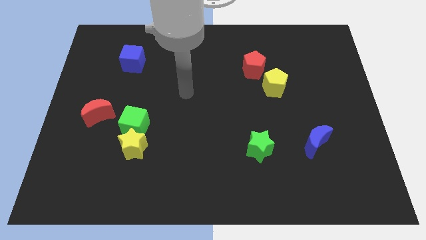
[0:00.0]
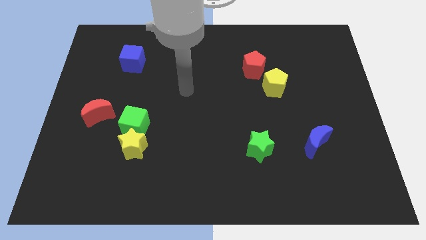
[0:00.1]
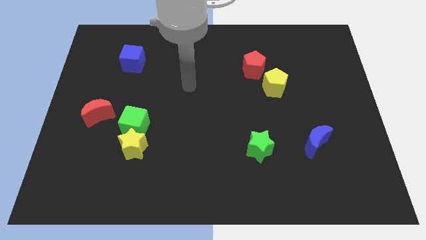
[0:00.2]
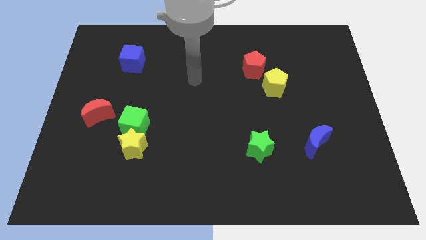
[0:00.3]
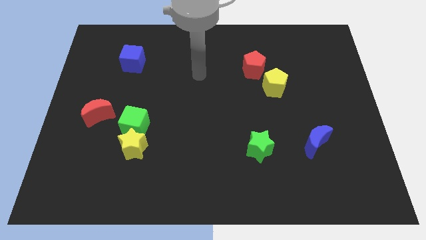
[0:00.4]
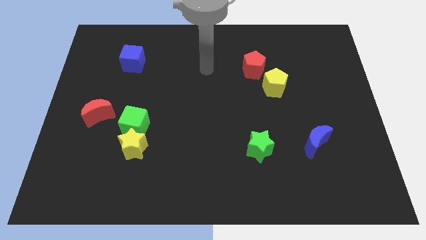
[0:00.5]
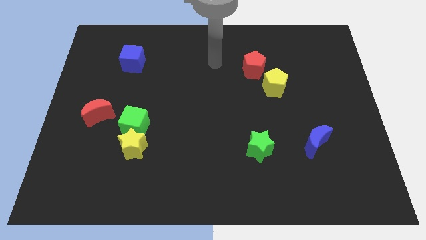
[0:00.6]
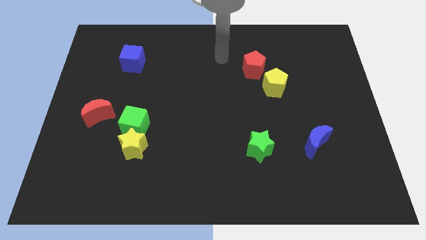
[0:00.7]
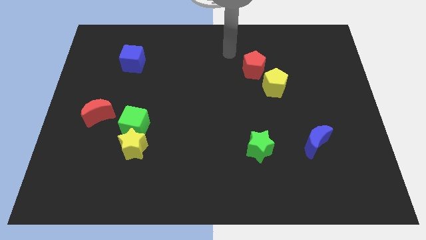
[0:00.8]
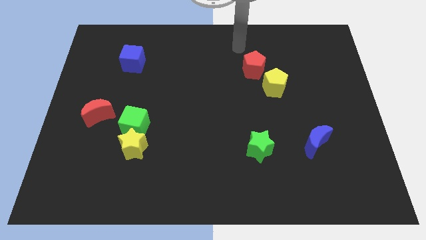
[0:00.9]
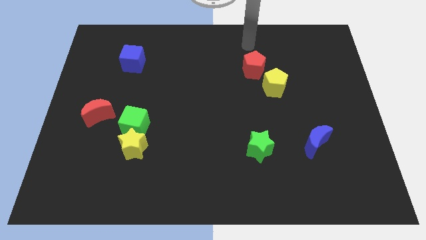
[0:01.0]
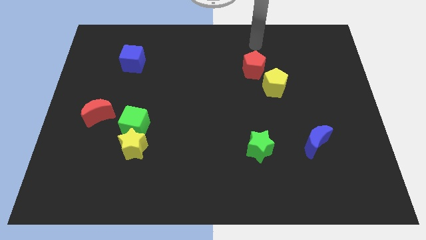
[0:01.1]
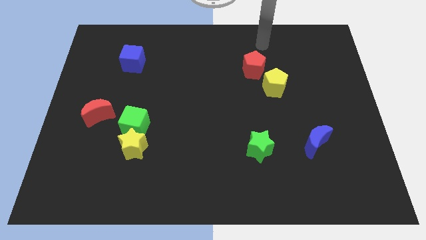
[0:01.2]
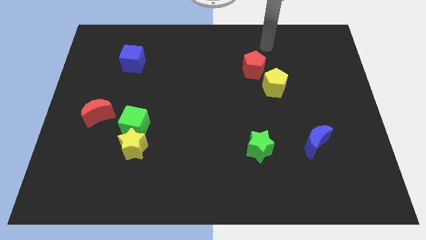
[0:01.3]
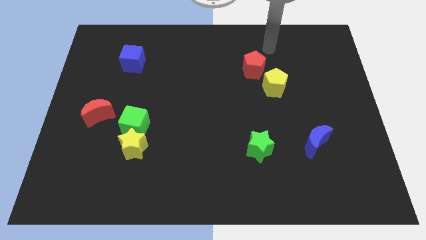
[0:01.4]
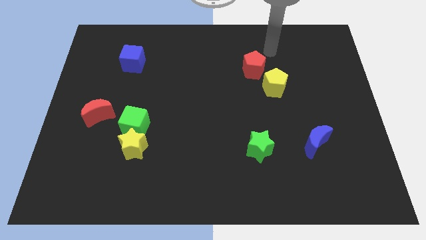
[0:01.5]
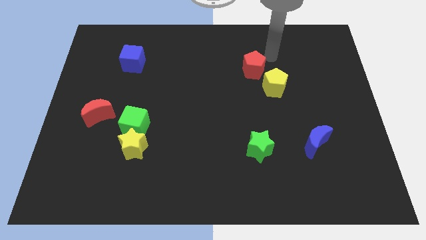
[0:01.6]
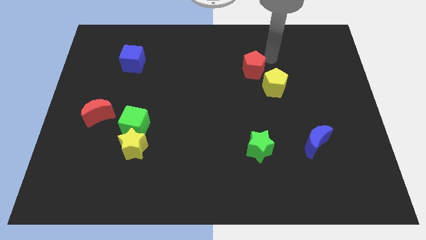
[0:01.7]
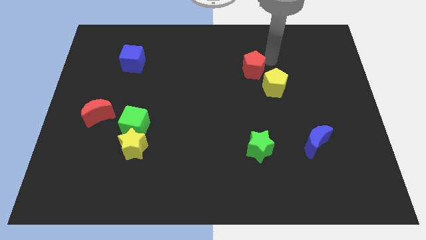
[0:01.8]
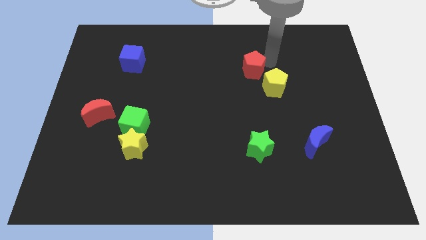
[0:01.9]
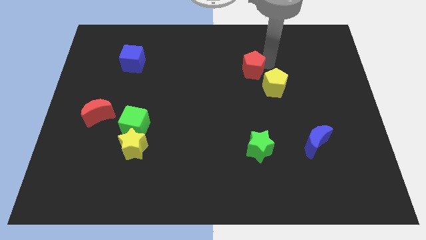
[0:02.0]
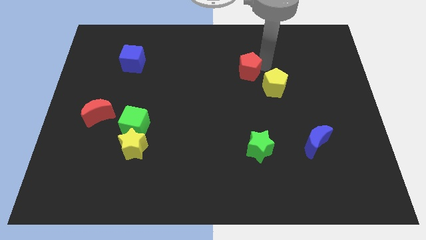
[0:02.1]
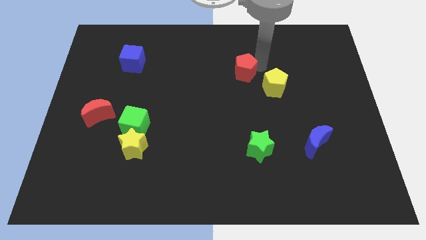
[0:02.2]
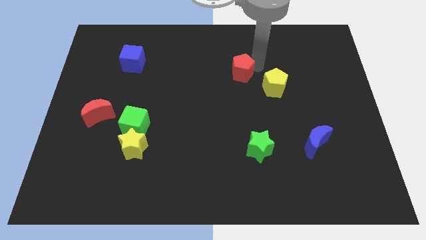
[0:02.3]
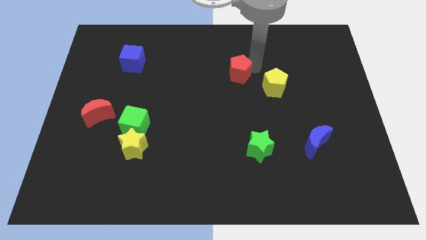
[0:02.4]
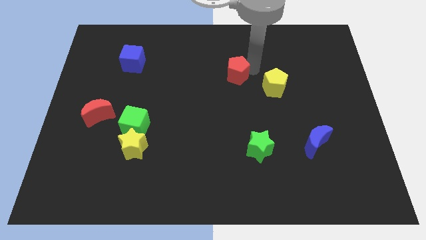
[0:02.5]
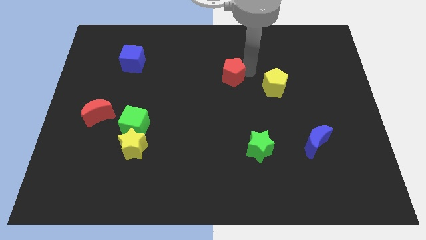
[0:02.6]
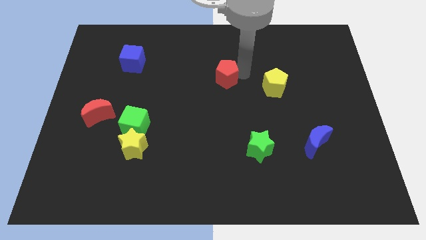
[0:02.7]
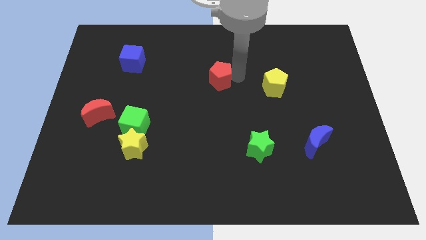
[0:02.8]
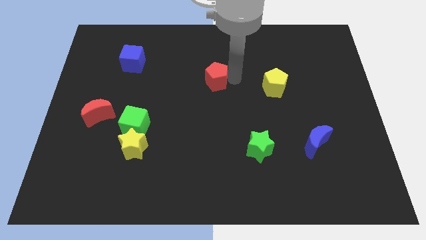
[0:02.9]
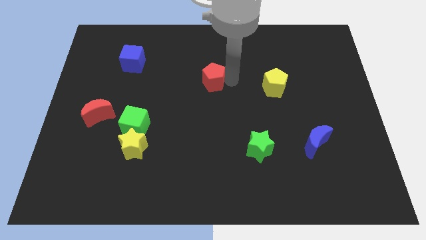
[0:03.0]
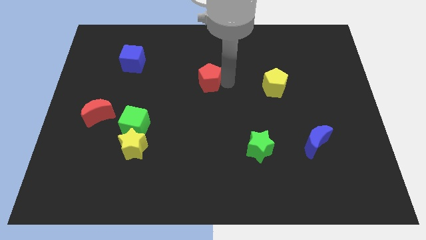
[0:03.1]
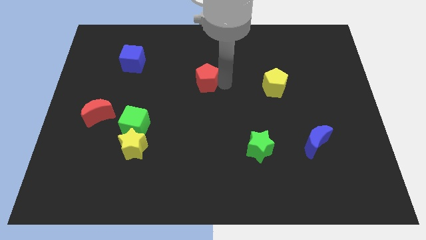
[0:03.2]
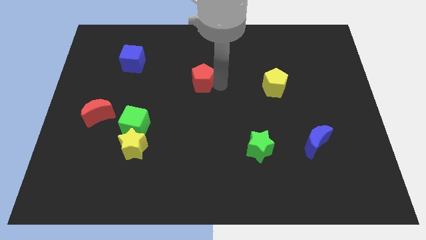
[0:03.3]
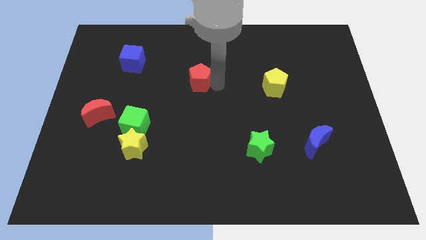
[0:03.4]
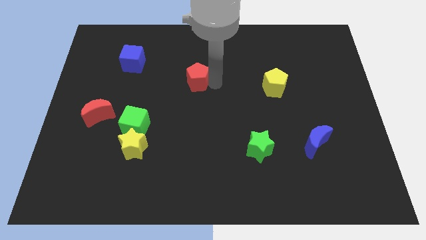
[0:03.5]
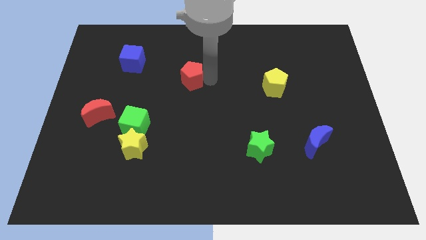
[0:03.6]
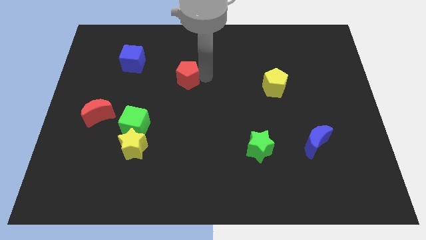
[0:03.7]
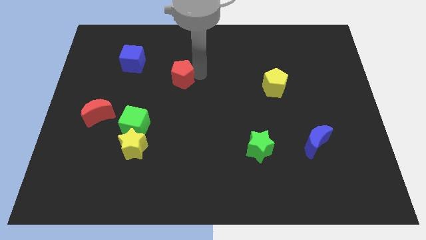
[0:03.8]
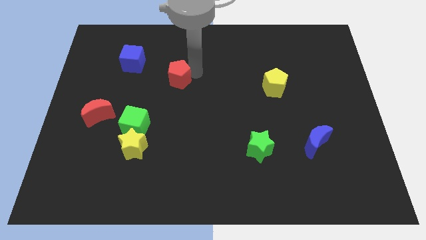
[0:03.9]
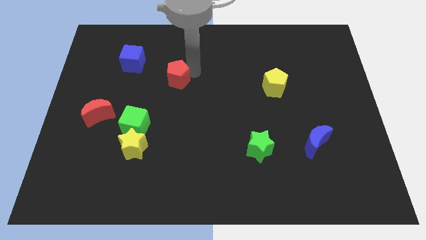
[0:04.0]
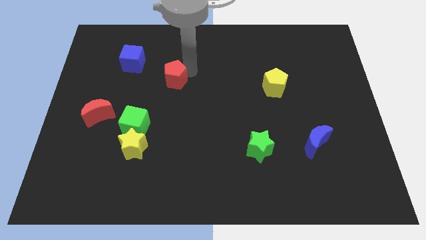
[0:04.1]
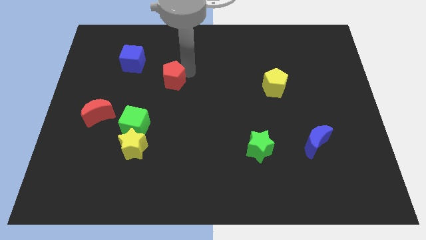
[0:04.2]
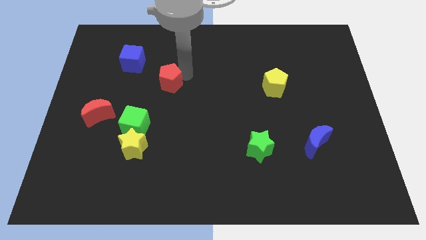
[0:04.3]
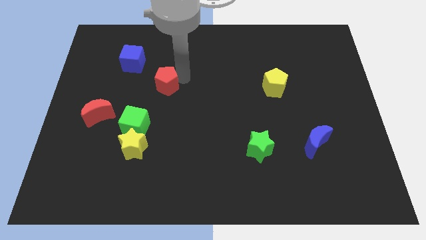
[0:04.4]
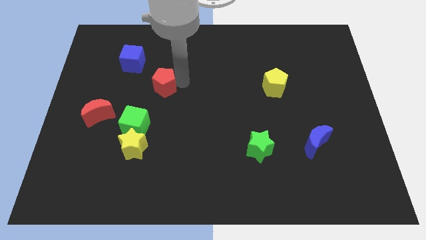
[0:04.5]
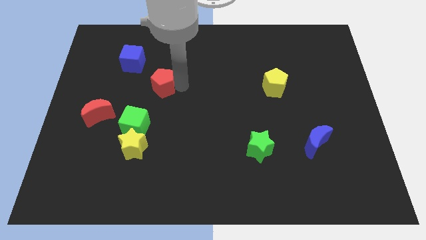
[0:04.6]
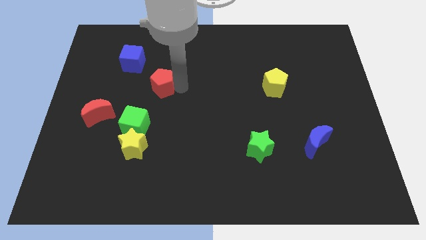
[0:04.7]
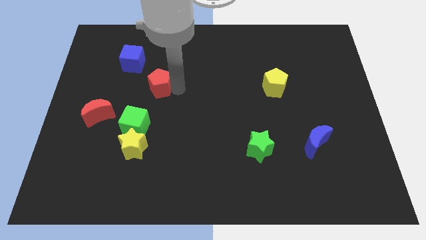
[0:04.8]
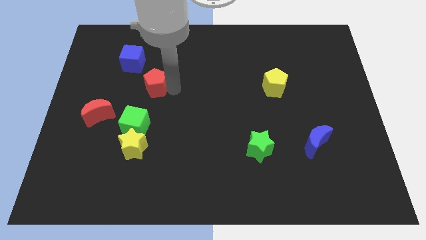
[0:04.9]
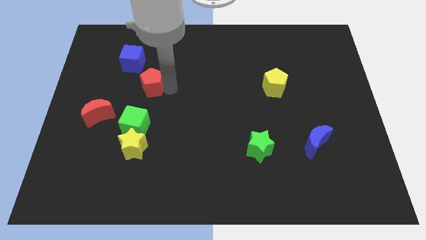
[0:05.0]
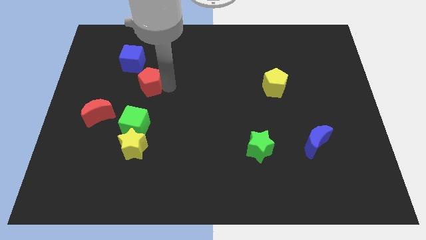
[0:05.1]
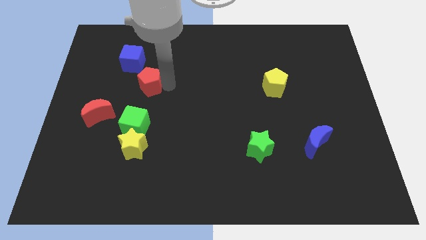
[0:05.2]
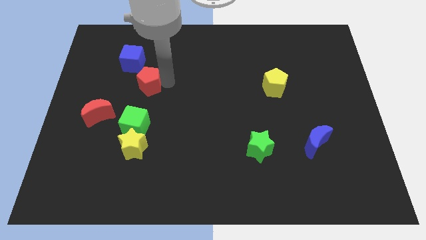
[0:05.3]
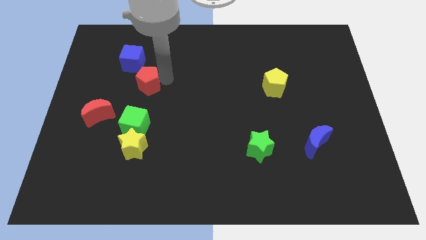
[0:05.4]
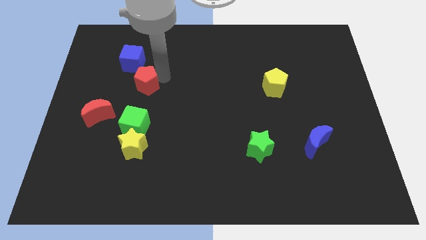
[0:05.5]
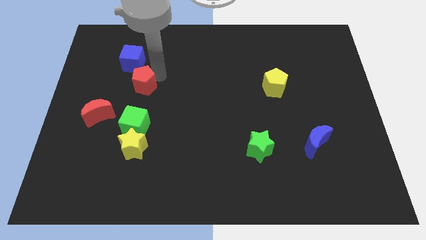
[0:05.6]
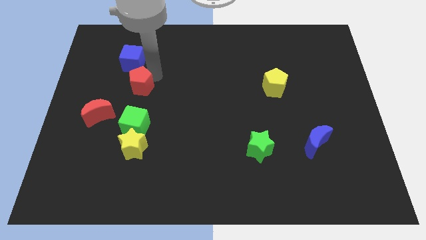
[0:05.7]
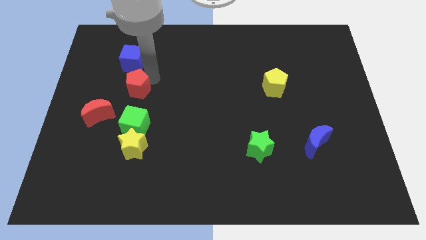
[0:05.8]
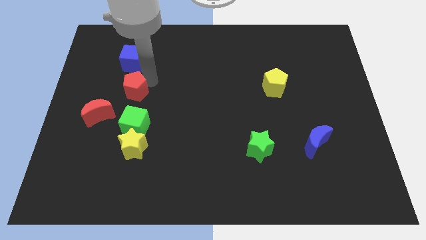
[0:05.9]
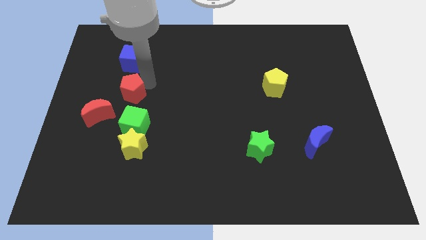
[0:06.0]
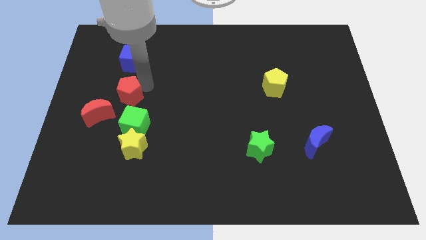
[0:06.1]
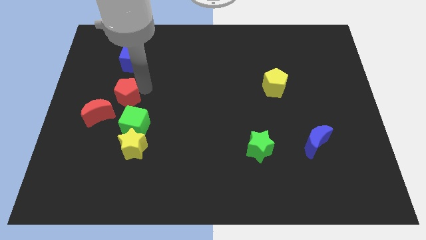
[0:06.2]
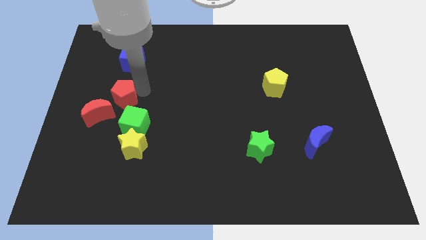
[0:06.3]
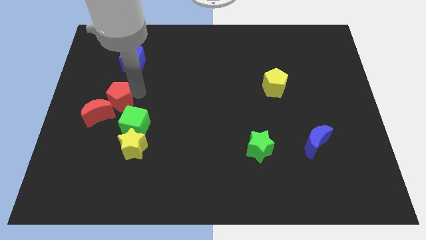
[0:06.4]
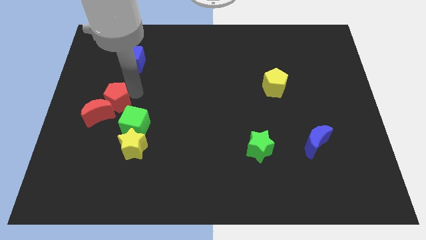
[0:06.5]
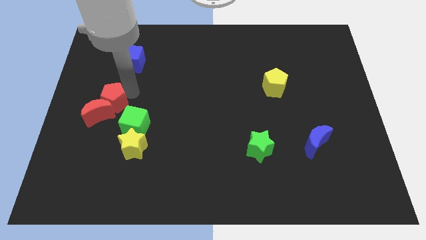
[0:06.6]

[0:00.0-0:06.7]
put the red pentagon close to the red moon

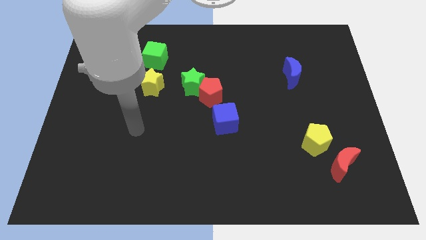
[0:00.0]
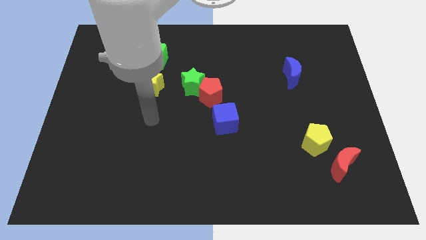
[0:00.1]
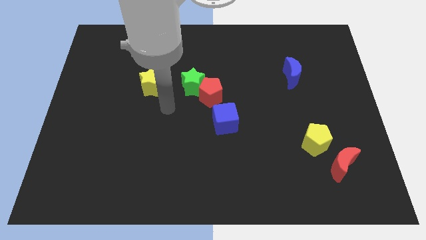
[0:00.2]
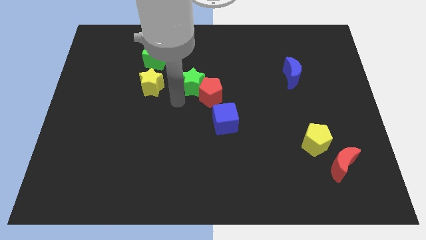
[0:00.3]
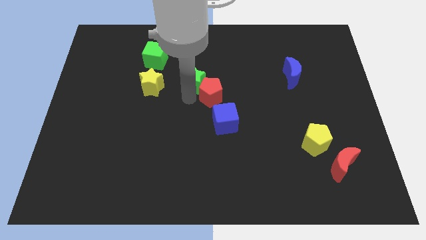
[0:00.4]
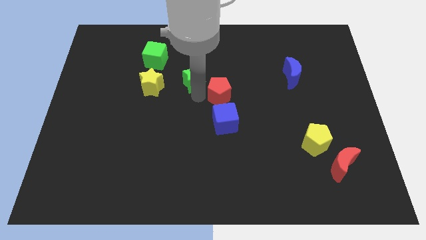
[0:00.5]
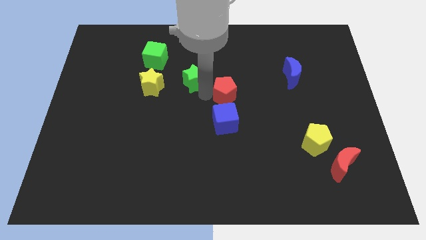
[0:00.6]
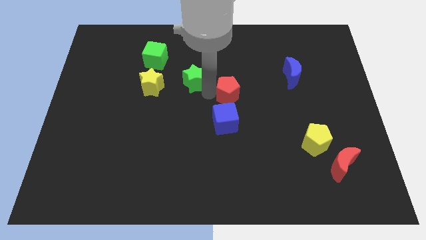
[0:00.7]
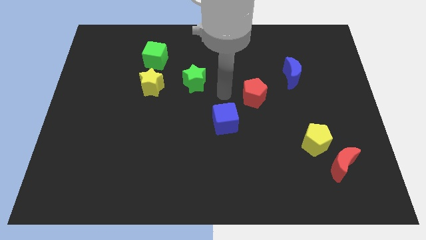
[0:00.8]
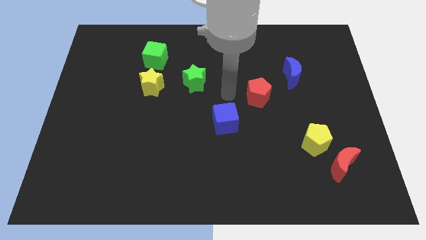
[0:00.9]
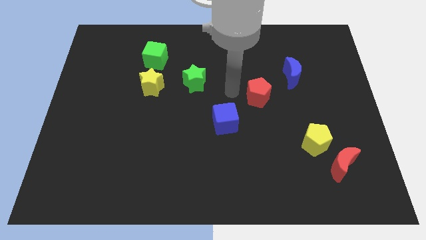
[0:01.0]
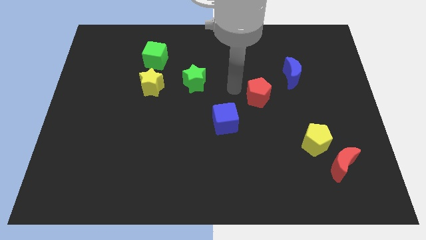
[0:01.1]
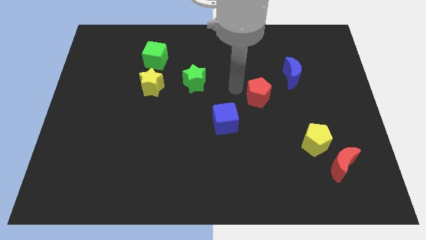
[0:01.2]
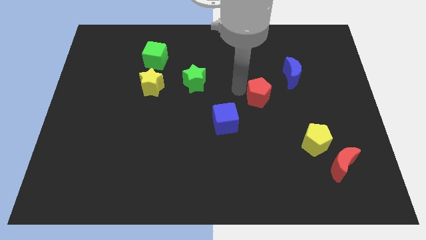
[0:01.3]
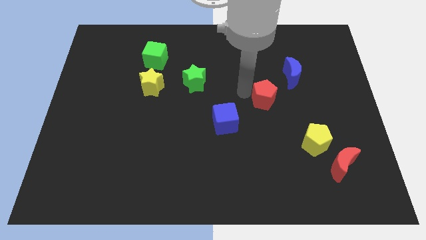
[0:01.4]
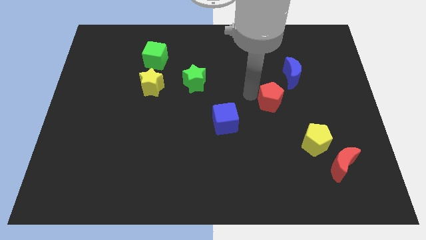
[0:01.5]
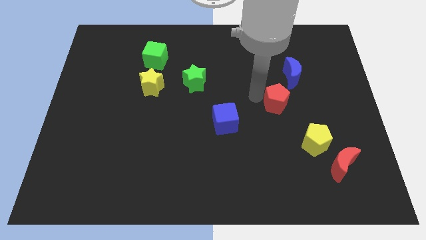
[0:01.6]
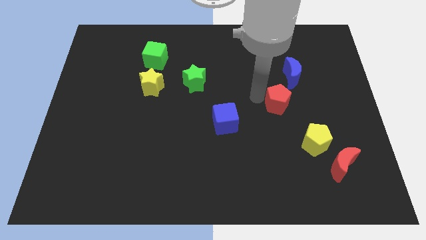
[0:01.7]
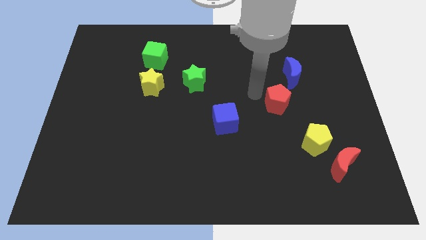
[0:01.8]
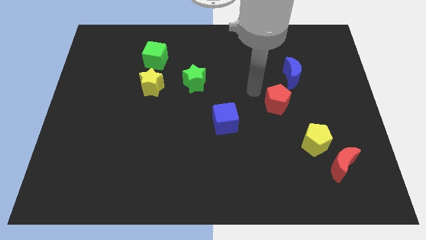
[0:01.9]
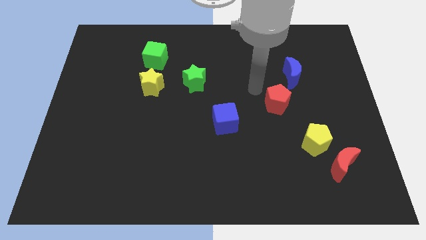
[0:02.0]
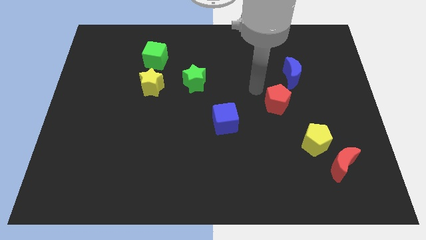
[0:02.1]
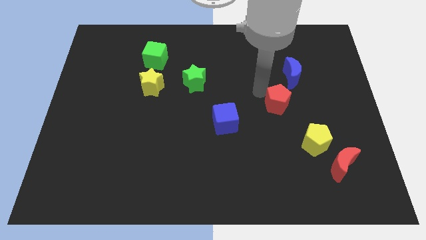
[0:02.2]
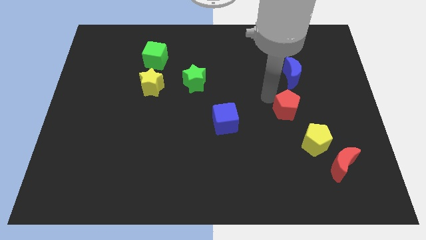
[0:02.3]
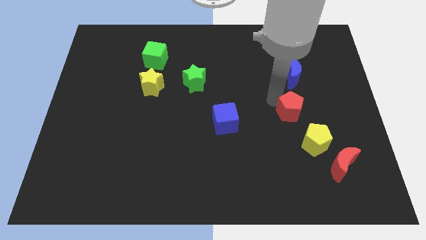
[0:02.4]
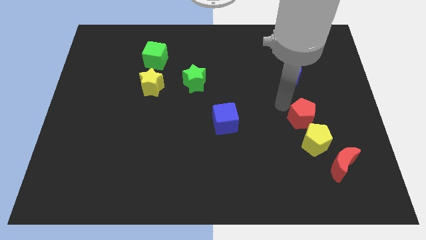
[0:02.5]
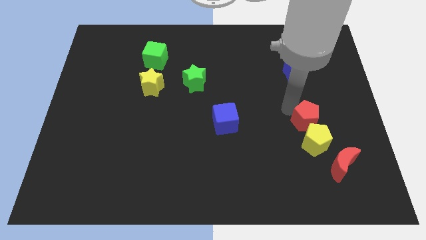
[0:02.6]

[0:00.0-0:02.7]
move the red pentagon next to the yellow pentagon
